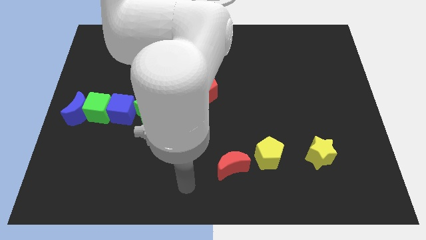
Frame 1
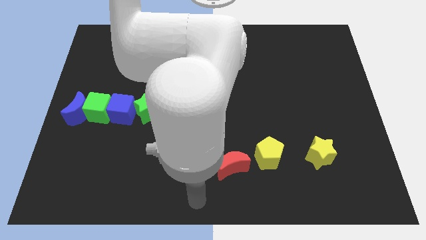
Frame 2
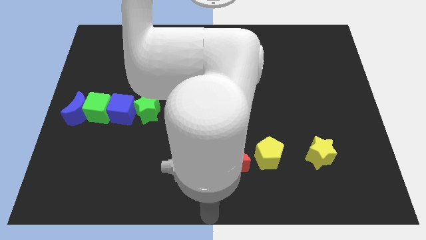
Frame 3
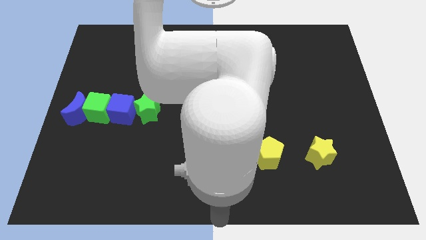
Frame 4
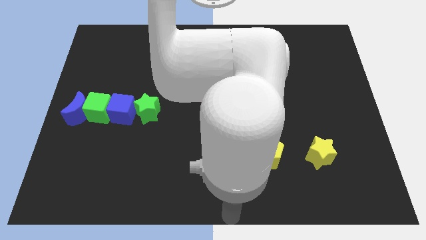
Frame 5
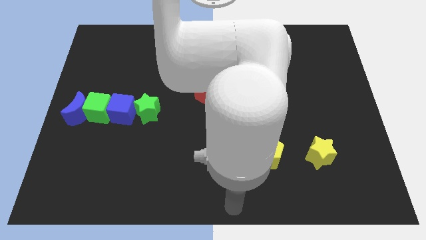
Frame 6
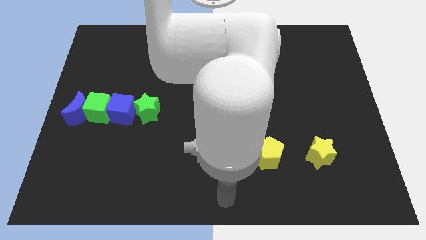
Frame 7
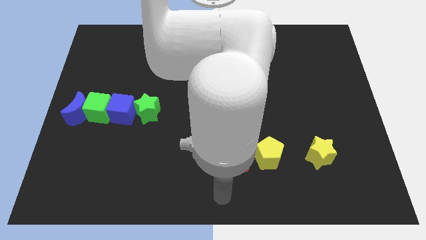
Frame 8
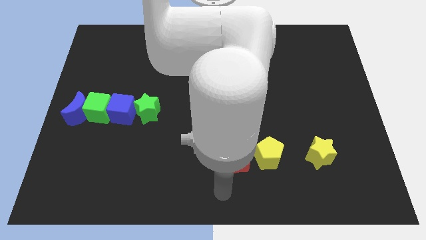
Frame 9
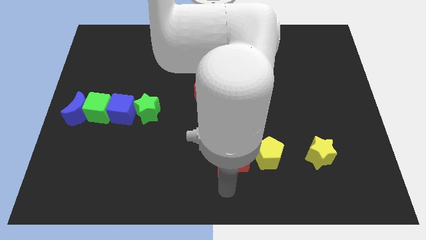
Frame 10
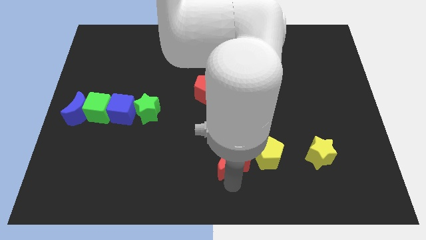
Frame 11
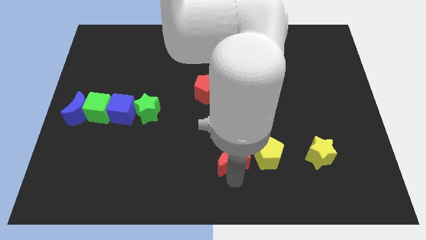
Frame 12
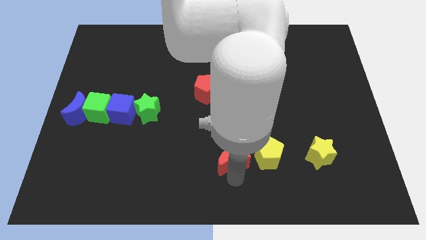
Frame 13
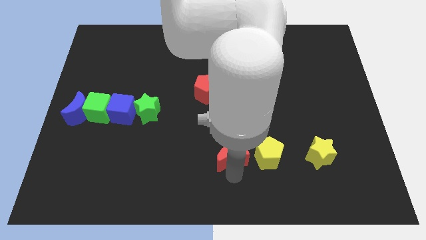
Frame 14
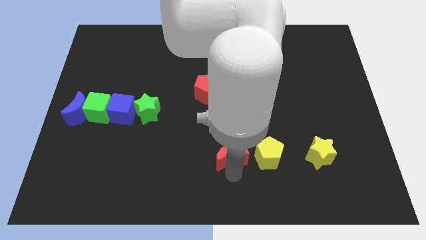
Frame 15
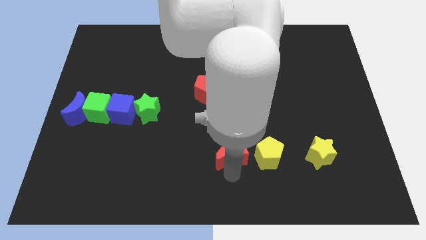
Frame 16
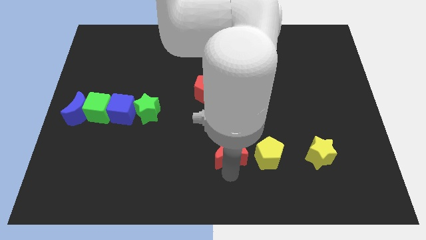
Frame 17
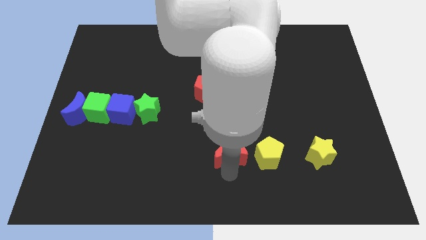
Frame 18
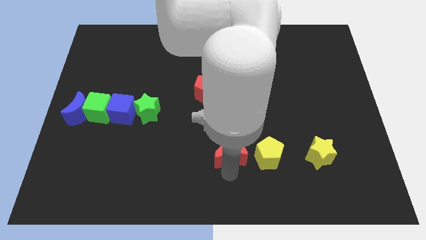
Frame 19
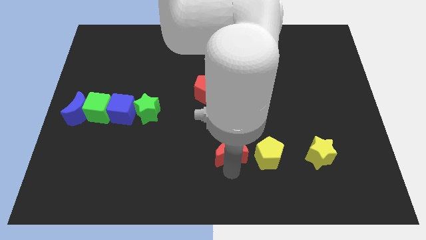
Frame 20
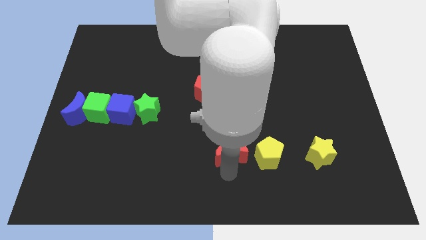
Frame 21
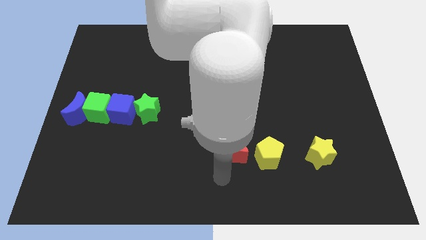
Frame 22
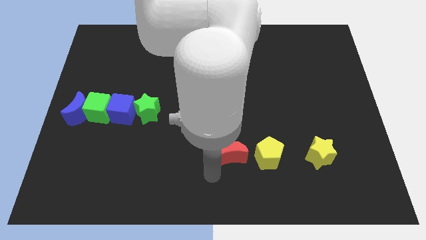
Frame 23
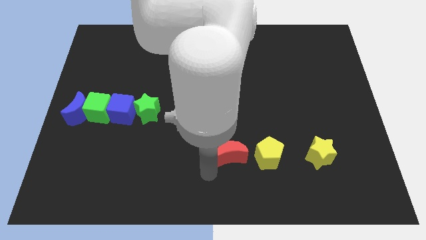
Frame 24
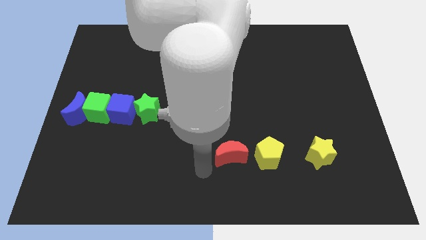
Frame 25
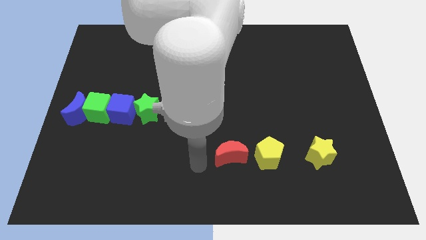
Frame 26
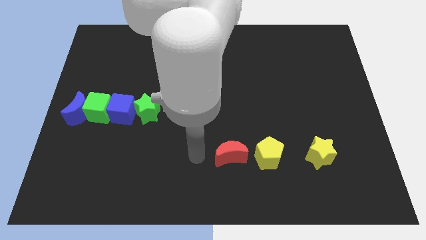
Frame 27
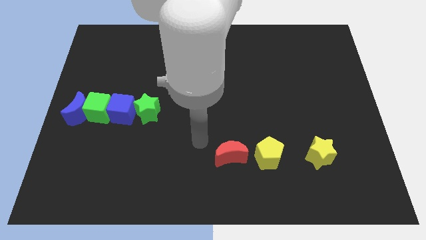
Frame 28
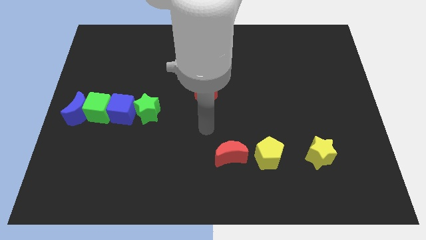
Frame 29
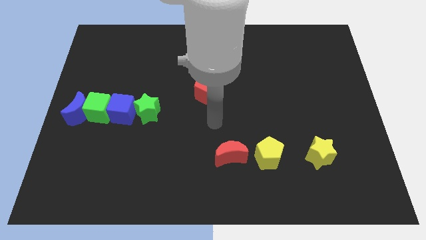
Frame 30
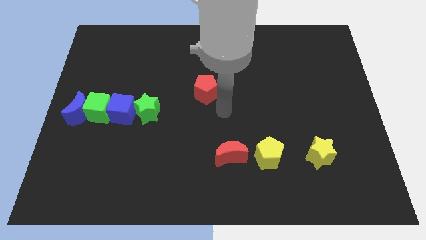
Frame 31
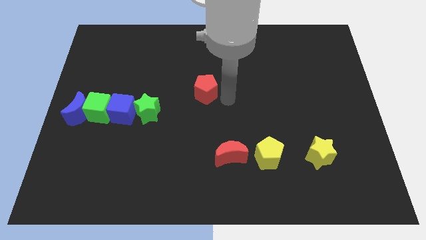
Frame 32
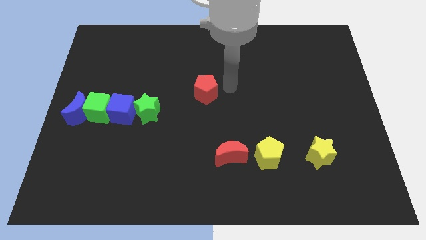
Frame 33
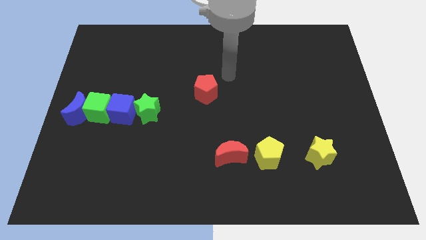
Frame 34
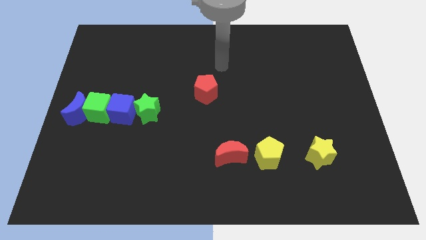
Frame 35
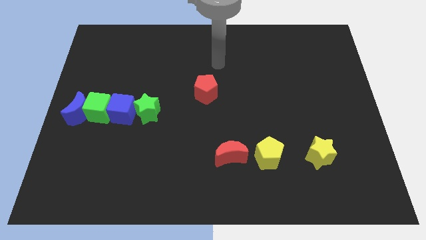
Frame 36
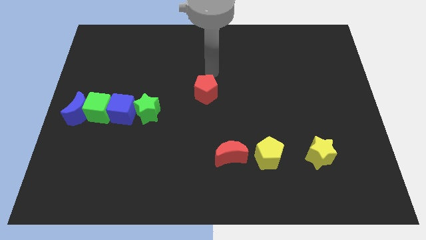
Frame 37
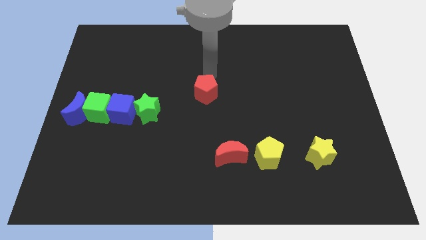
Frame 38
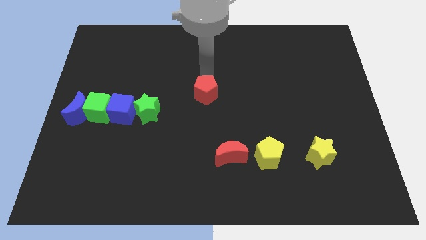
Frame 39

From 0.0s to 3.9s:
point your arm above red pentagon

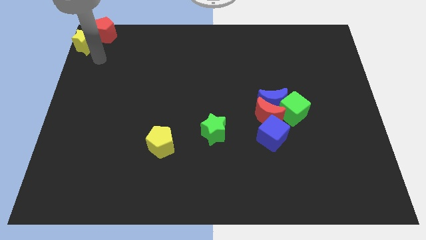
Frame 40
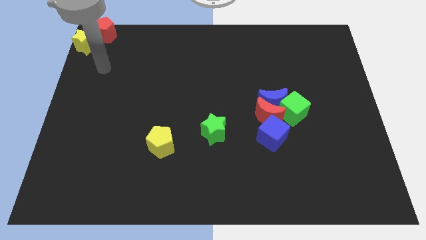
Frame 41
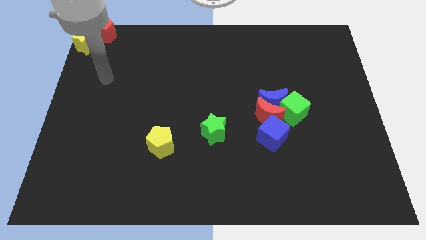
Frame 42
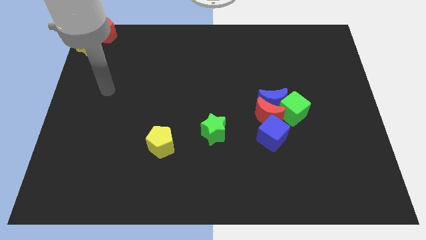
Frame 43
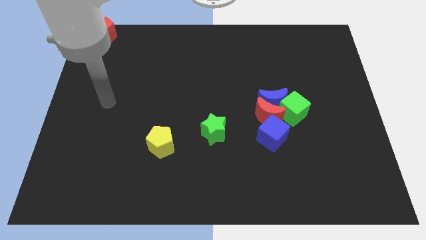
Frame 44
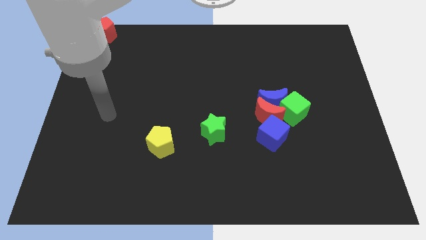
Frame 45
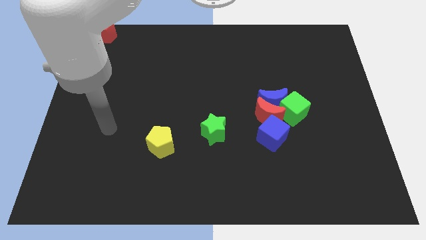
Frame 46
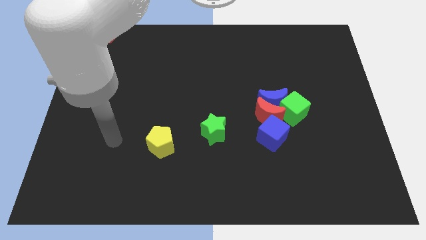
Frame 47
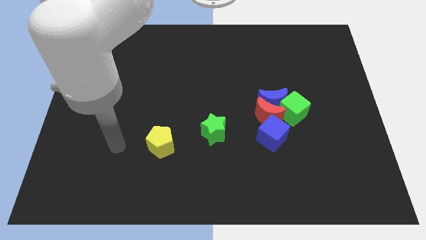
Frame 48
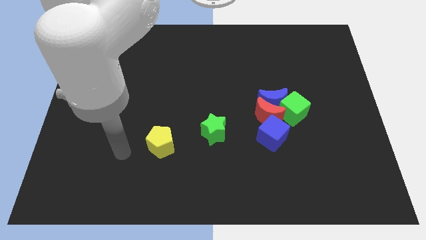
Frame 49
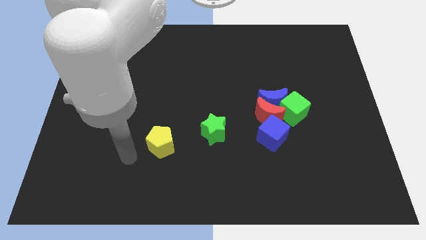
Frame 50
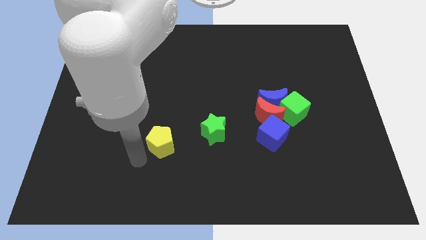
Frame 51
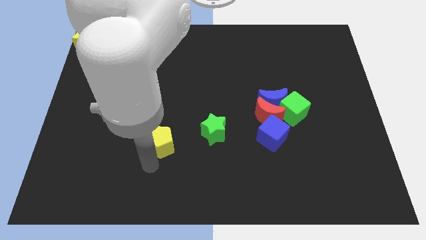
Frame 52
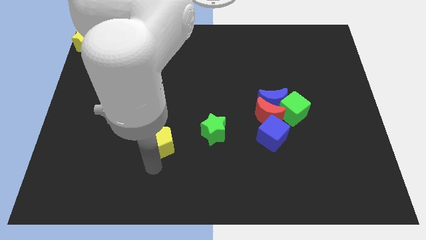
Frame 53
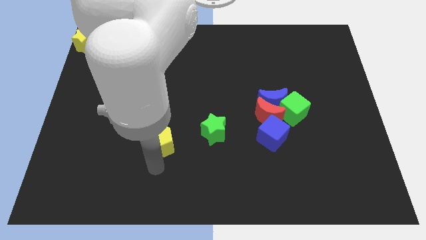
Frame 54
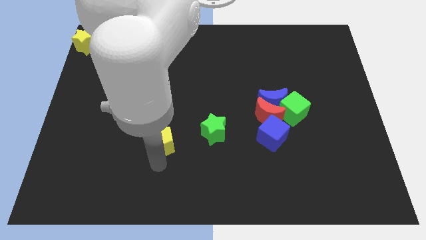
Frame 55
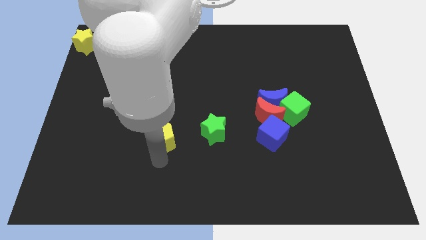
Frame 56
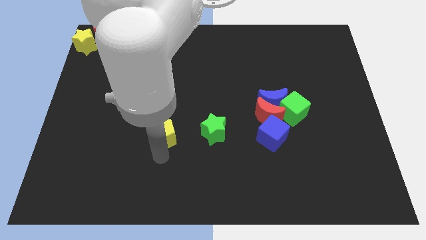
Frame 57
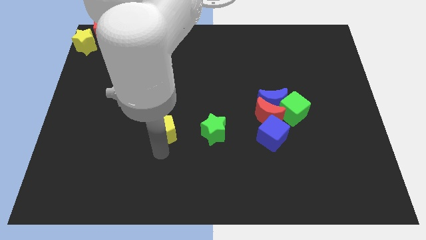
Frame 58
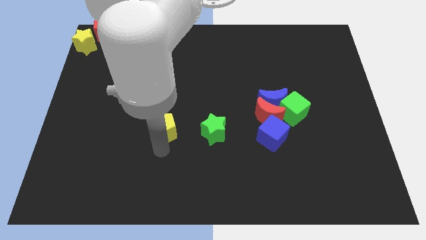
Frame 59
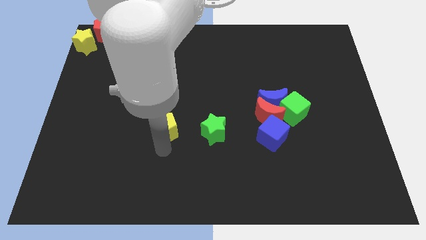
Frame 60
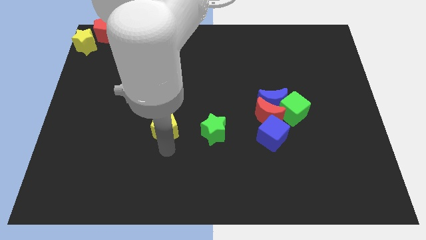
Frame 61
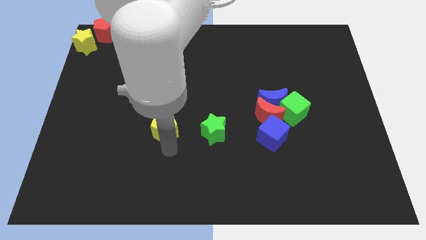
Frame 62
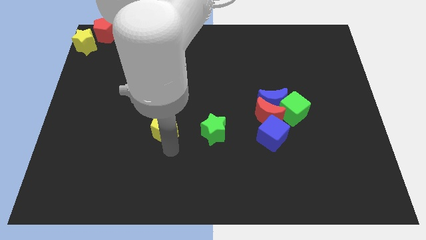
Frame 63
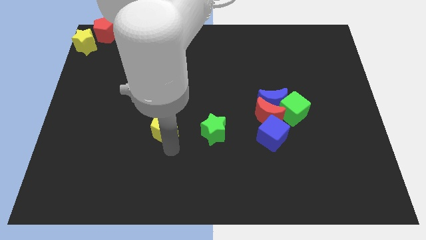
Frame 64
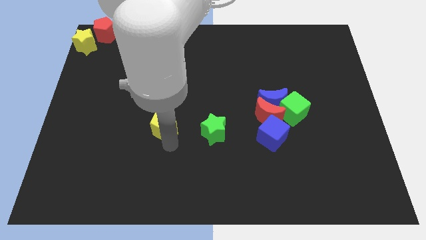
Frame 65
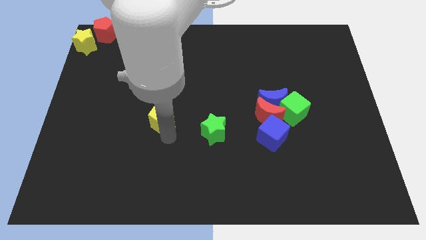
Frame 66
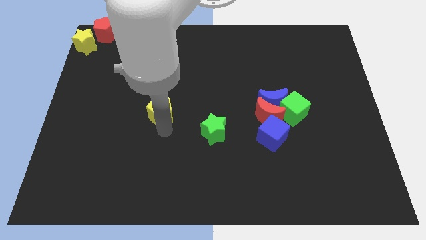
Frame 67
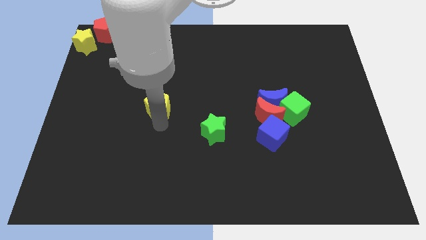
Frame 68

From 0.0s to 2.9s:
move the yellow pentagon to the left of the green star

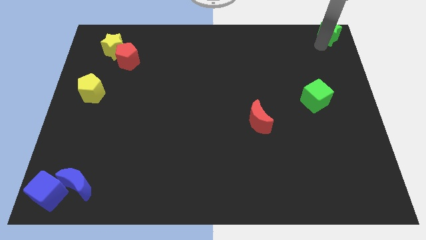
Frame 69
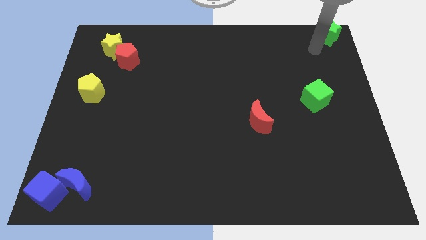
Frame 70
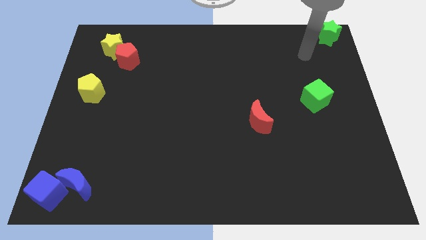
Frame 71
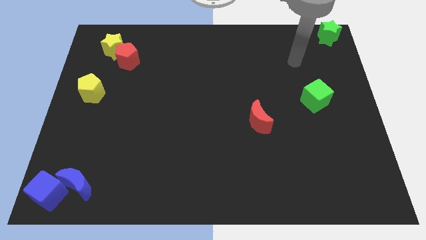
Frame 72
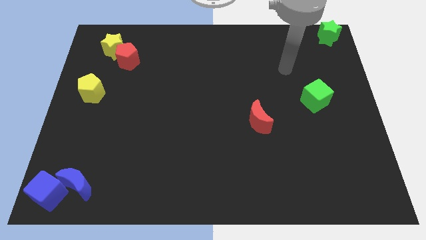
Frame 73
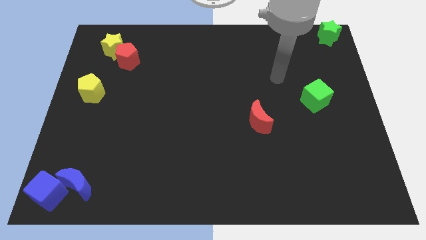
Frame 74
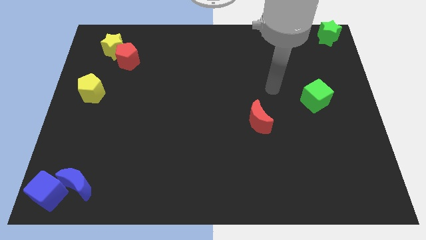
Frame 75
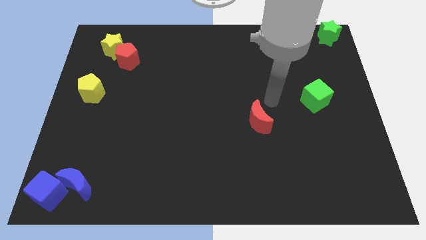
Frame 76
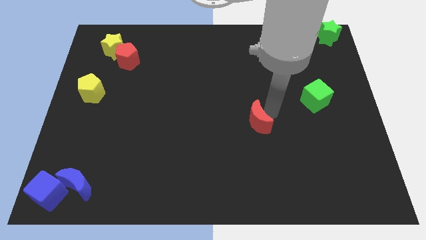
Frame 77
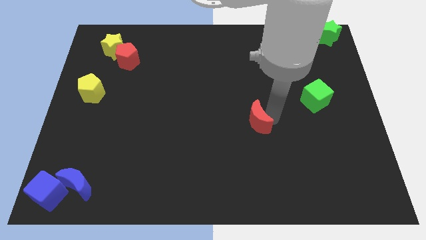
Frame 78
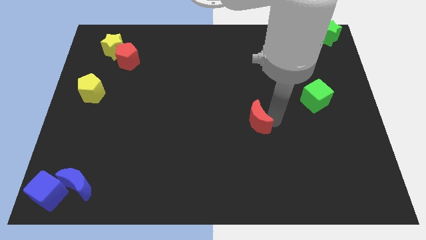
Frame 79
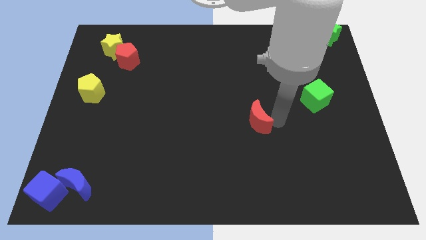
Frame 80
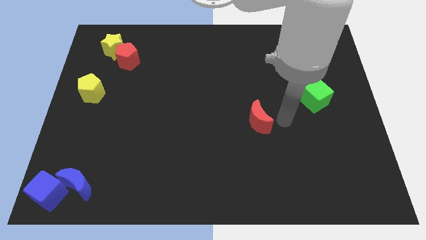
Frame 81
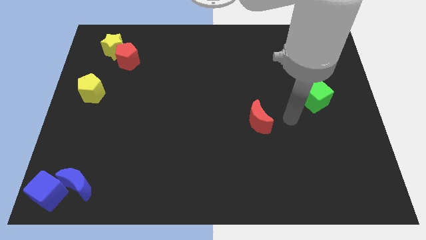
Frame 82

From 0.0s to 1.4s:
place your arm diagonally in between the red moon and green cube

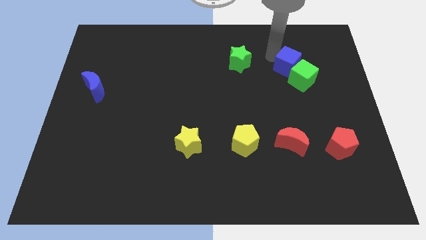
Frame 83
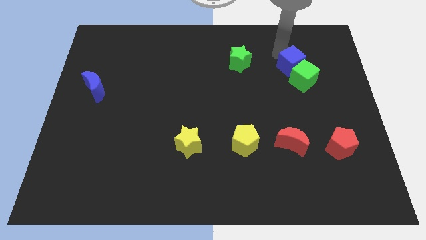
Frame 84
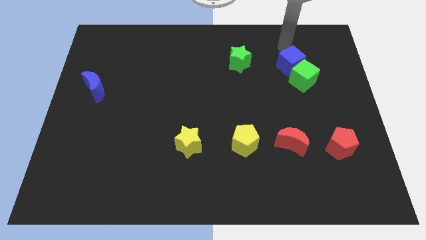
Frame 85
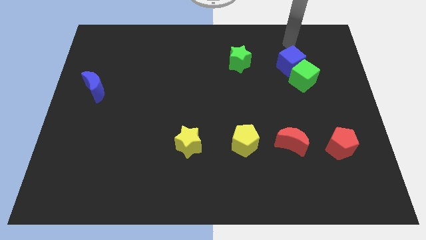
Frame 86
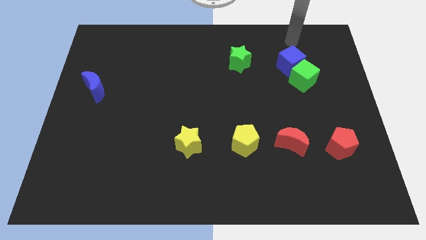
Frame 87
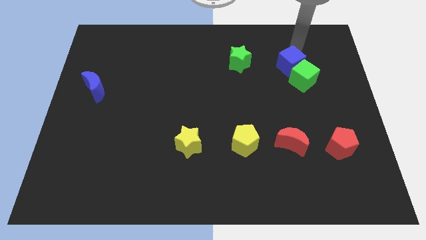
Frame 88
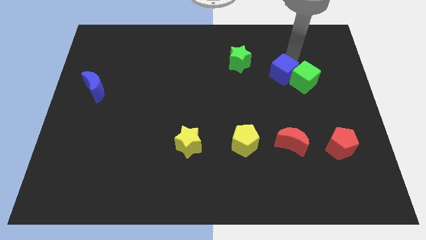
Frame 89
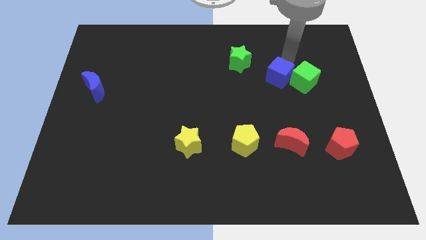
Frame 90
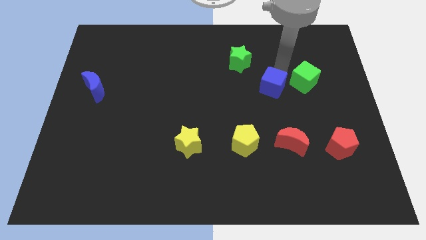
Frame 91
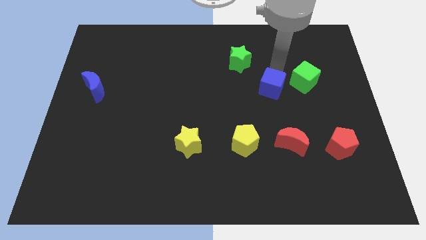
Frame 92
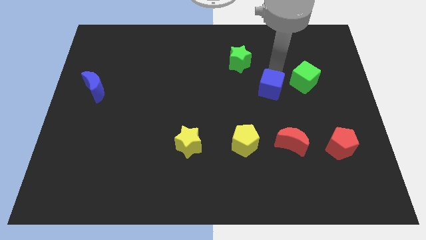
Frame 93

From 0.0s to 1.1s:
push the blue cube the right center of the board
